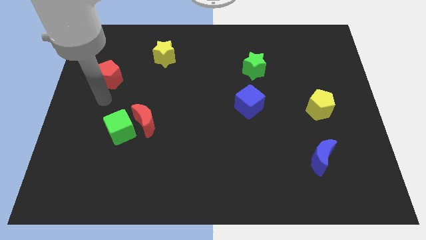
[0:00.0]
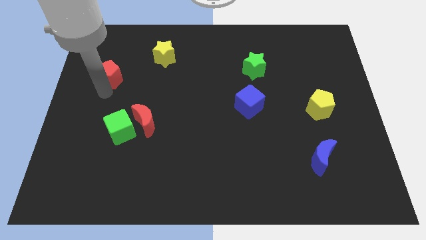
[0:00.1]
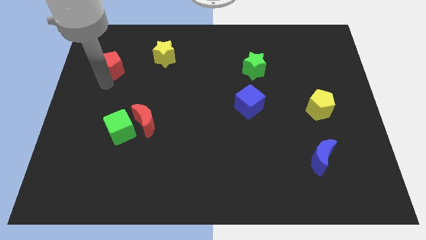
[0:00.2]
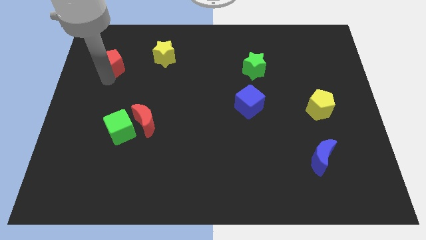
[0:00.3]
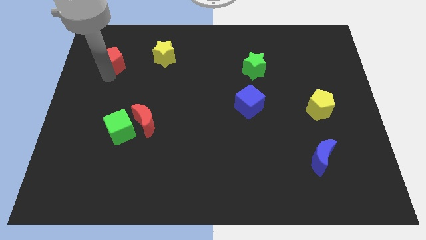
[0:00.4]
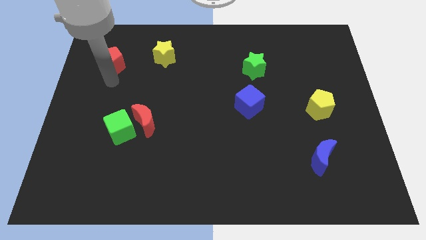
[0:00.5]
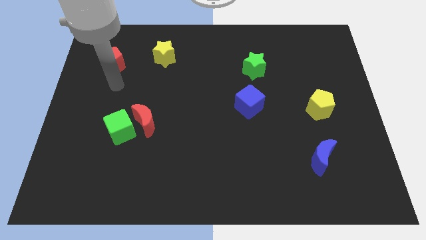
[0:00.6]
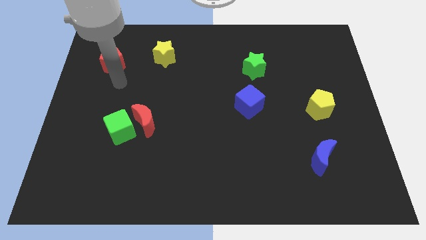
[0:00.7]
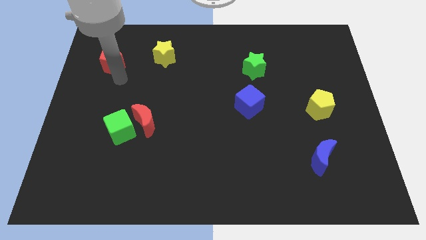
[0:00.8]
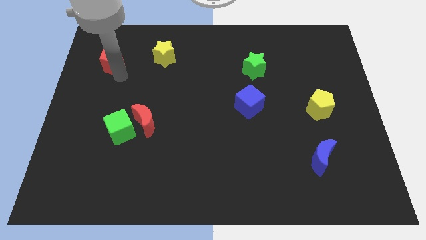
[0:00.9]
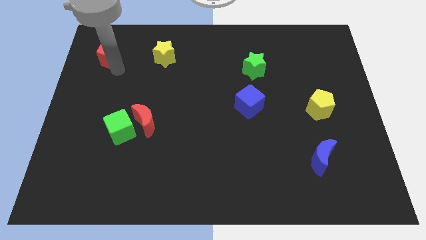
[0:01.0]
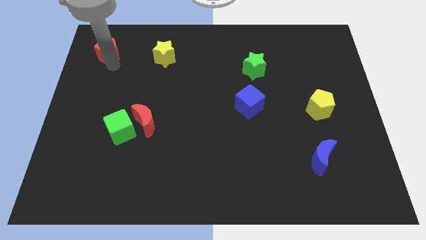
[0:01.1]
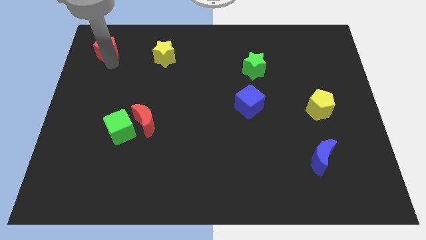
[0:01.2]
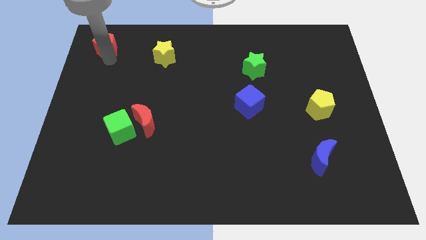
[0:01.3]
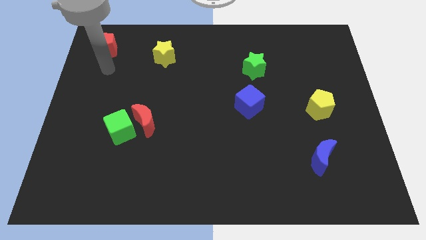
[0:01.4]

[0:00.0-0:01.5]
push the red pentagon to the top left to the board

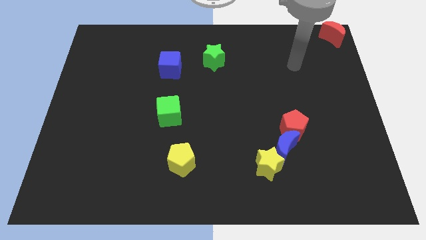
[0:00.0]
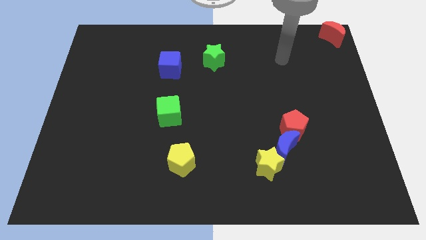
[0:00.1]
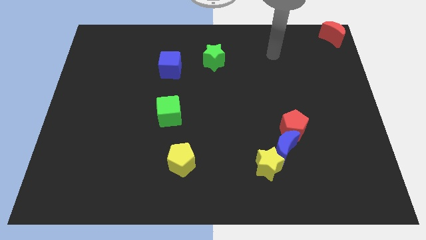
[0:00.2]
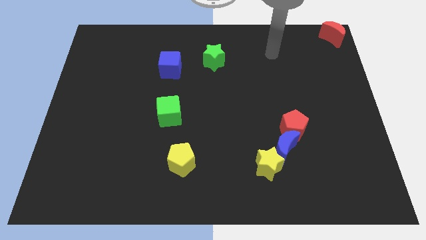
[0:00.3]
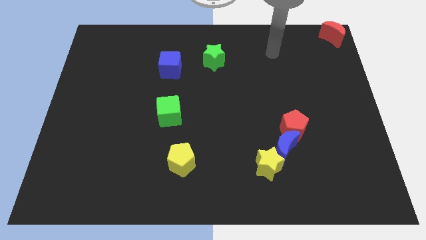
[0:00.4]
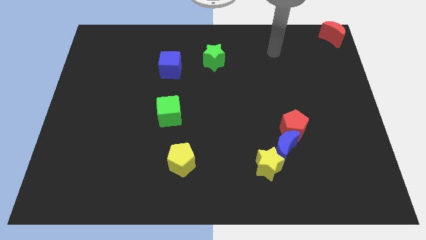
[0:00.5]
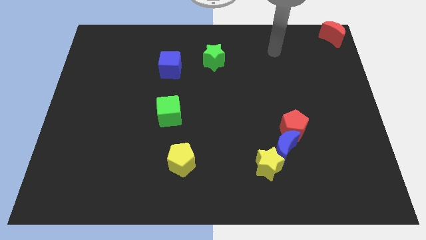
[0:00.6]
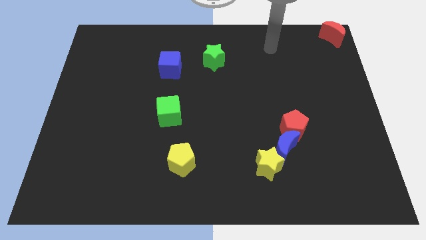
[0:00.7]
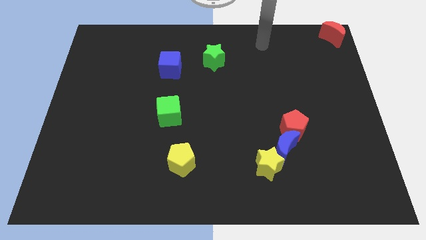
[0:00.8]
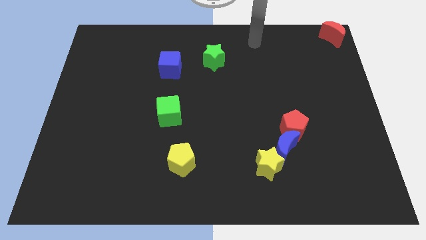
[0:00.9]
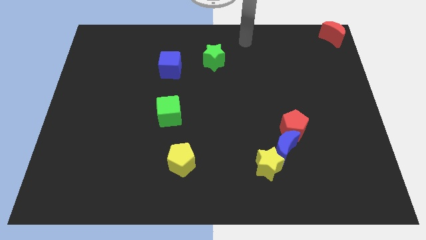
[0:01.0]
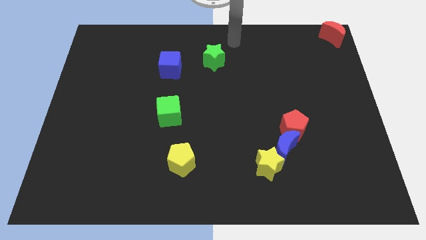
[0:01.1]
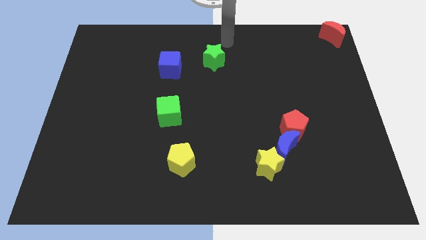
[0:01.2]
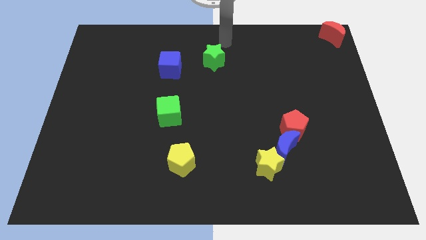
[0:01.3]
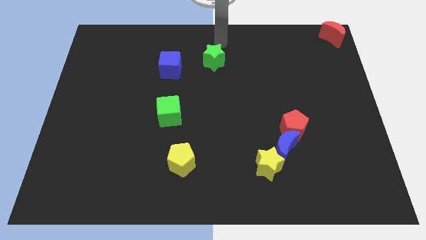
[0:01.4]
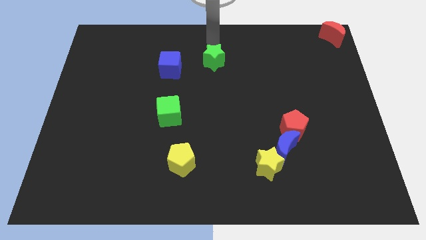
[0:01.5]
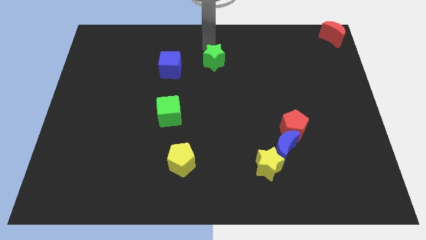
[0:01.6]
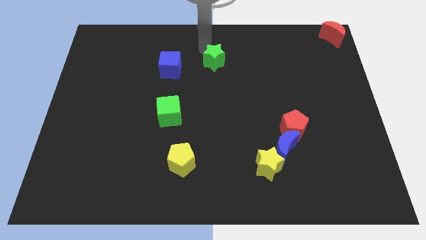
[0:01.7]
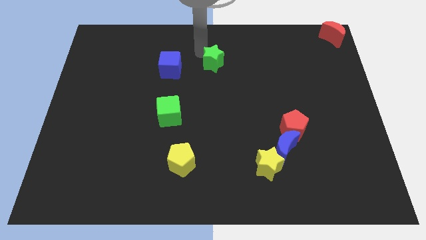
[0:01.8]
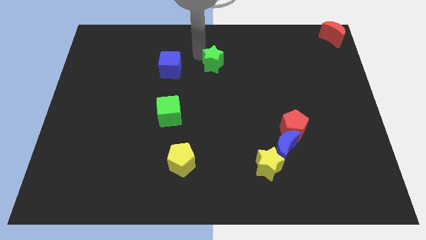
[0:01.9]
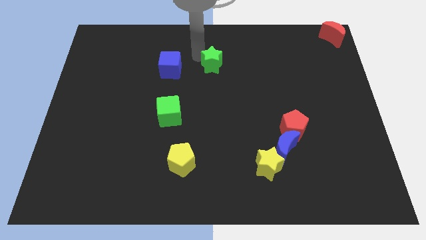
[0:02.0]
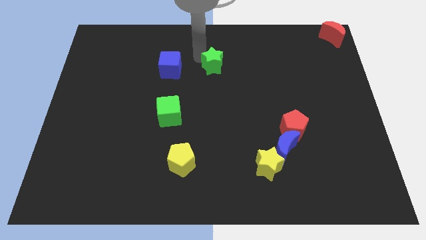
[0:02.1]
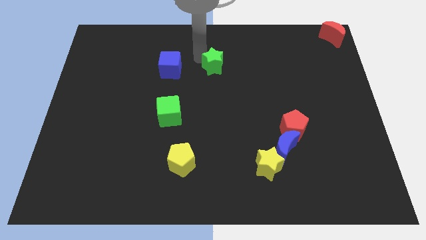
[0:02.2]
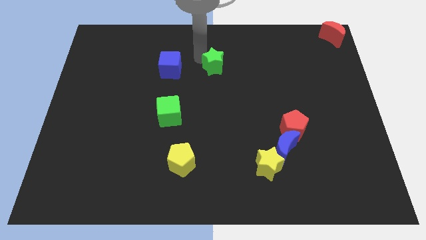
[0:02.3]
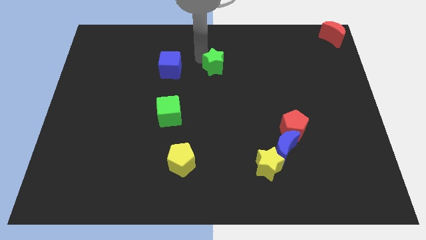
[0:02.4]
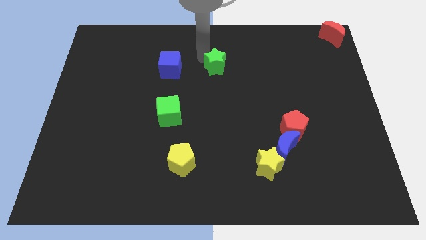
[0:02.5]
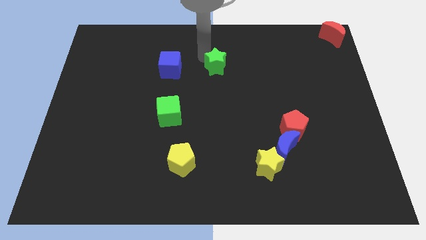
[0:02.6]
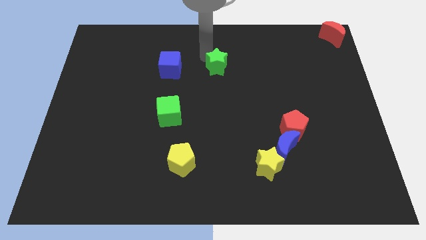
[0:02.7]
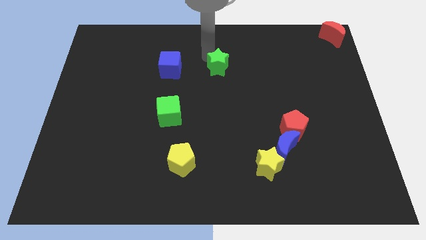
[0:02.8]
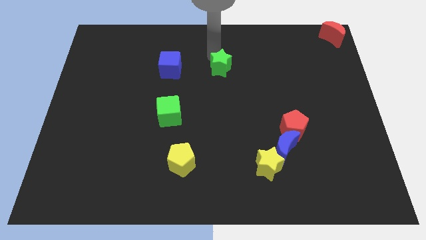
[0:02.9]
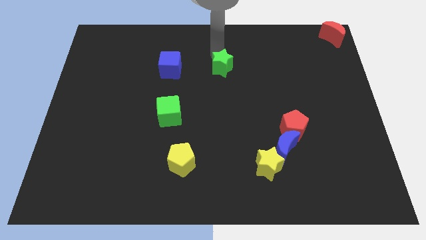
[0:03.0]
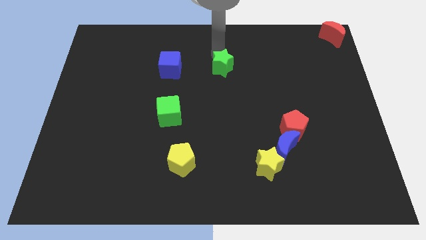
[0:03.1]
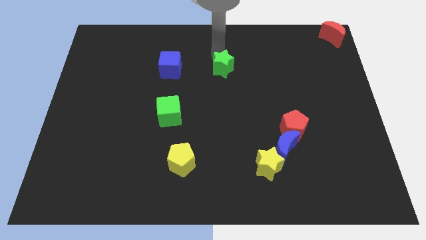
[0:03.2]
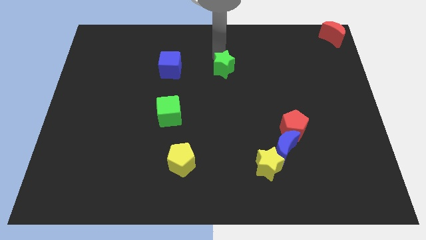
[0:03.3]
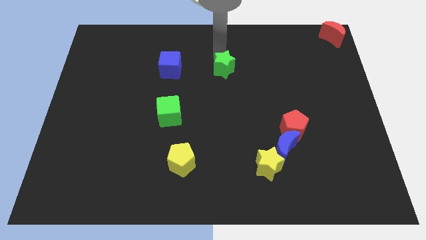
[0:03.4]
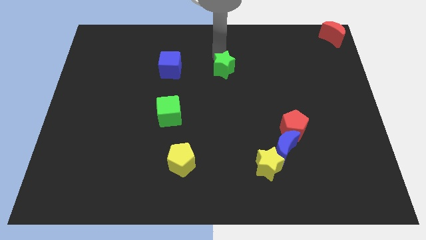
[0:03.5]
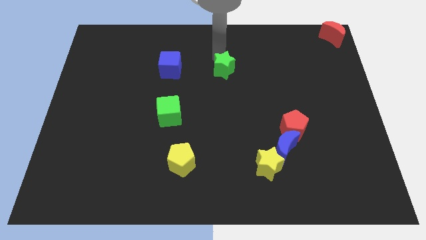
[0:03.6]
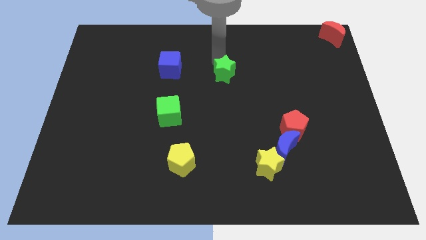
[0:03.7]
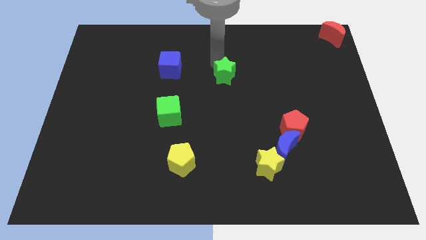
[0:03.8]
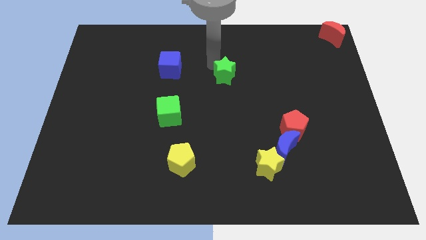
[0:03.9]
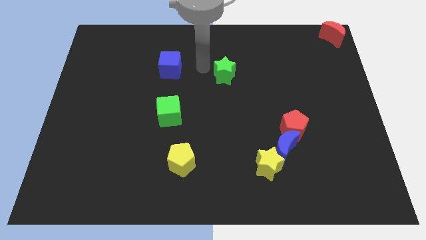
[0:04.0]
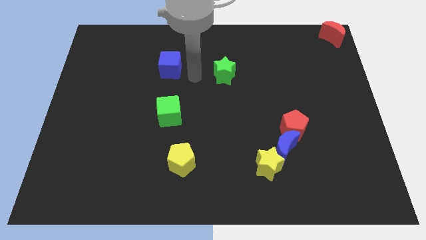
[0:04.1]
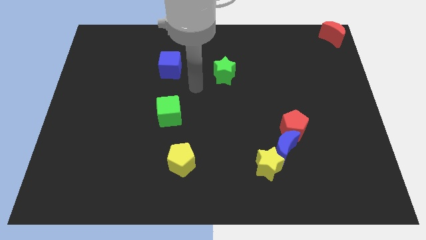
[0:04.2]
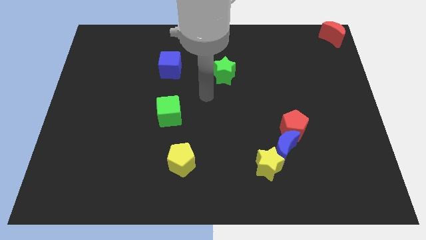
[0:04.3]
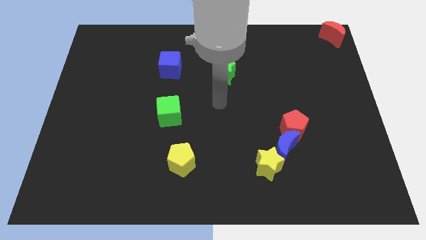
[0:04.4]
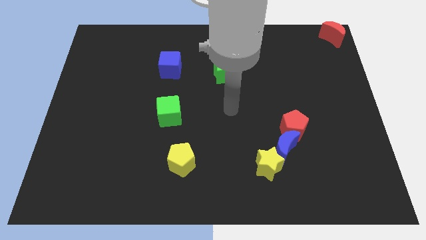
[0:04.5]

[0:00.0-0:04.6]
push the green star to the right of the blue cube

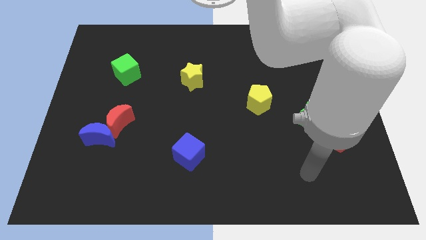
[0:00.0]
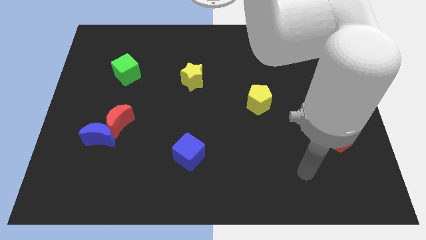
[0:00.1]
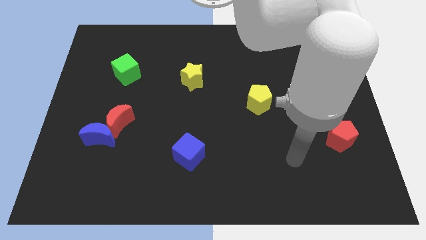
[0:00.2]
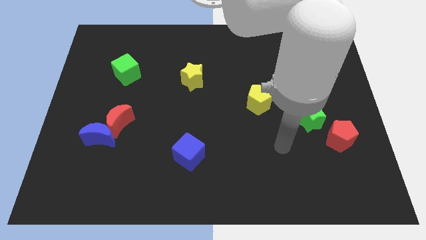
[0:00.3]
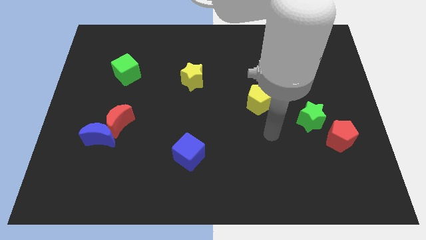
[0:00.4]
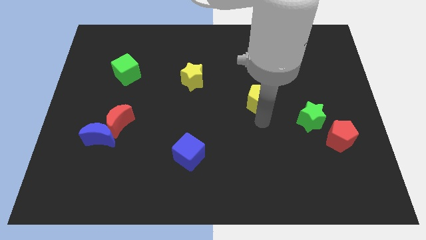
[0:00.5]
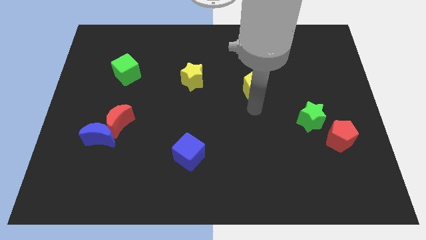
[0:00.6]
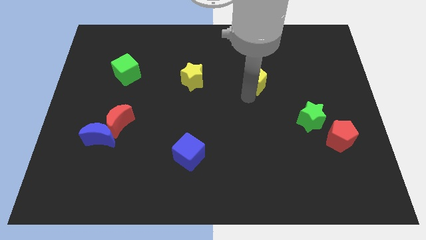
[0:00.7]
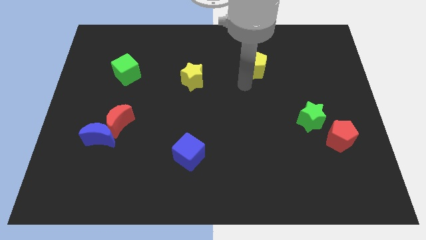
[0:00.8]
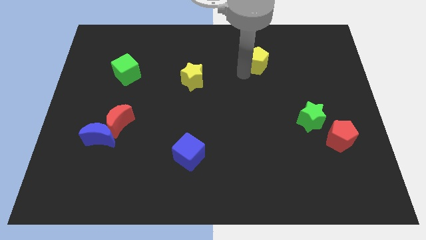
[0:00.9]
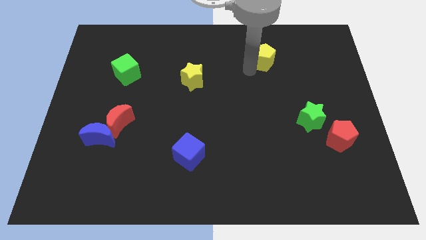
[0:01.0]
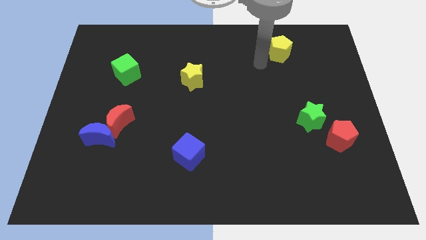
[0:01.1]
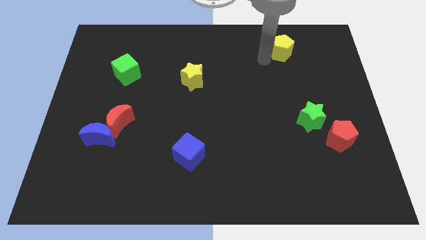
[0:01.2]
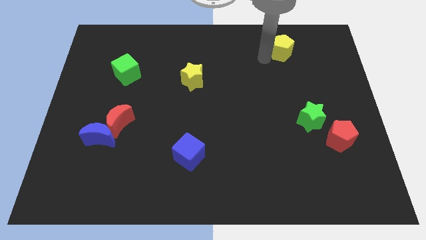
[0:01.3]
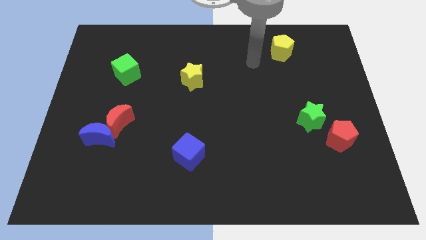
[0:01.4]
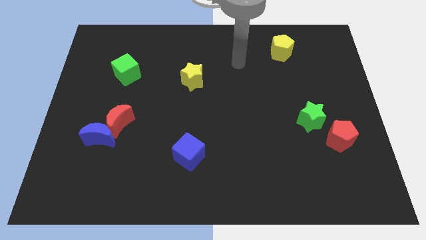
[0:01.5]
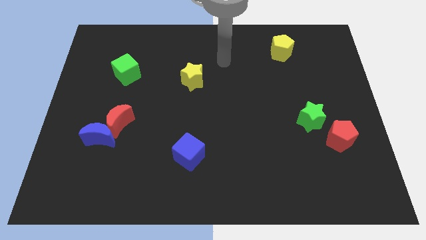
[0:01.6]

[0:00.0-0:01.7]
push the yellow pentagon towards the top right side

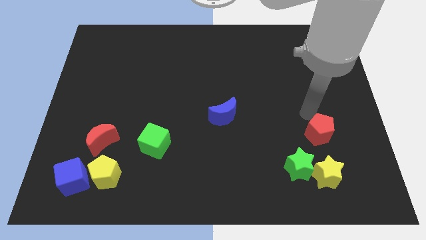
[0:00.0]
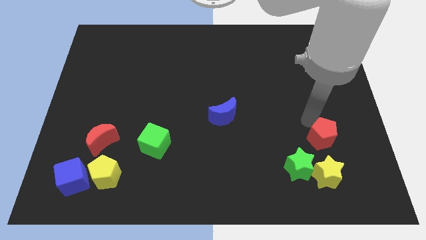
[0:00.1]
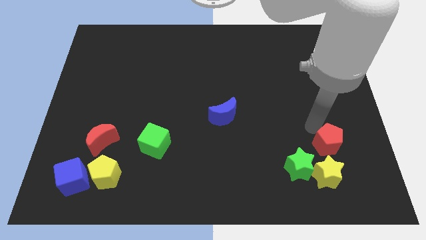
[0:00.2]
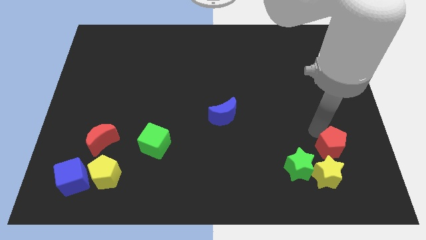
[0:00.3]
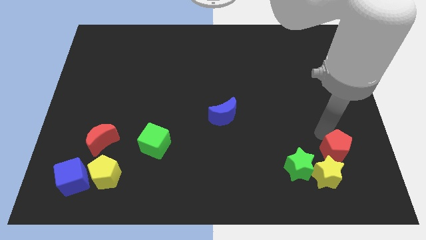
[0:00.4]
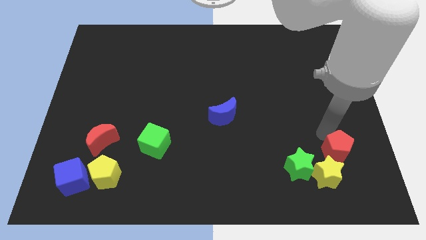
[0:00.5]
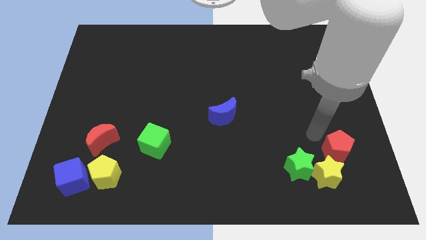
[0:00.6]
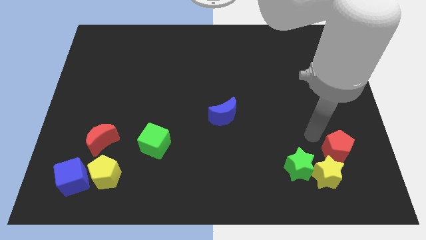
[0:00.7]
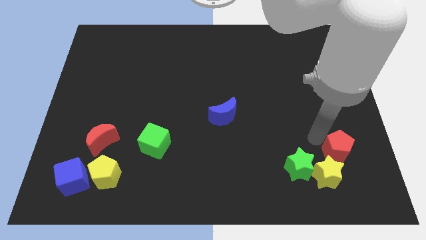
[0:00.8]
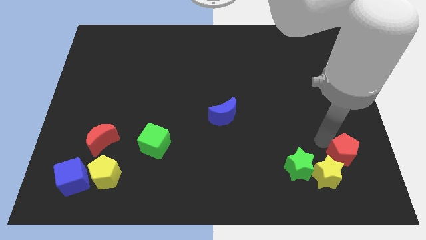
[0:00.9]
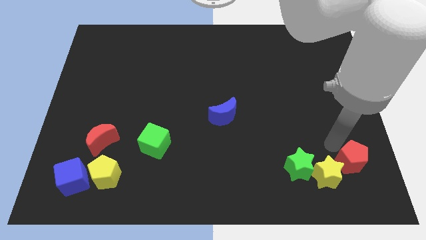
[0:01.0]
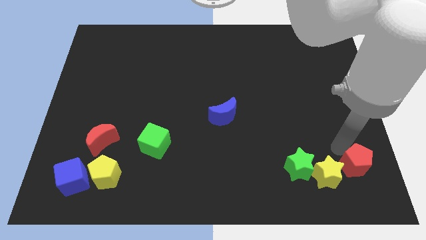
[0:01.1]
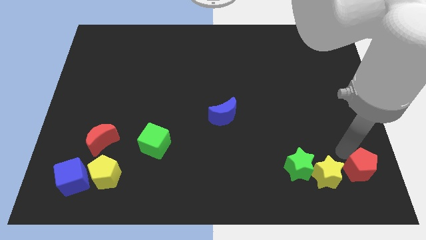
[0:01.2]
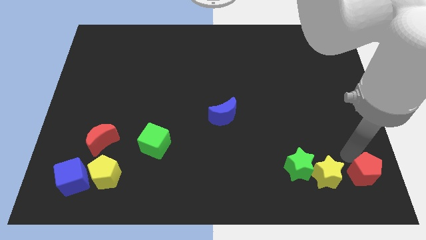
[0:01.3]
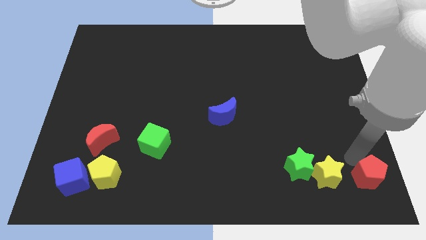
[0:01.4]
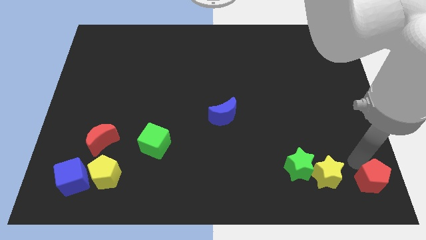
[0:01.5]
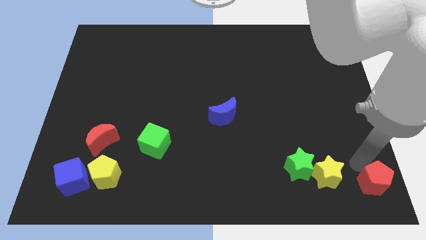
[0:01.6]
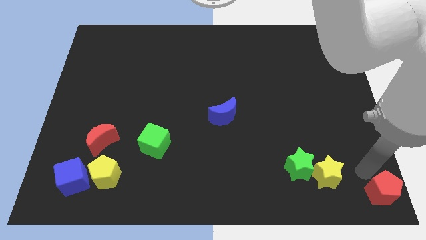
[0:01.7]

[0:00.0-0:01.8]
push the red pentagon to the right of the yellow star
